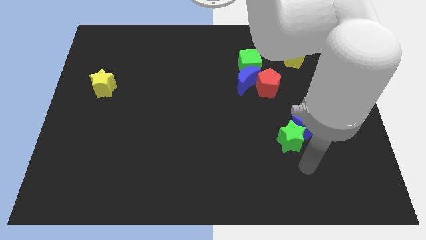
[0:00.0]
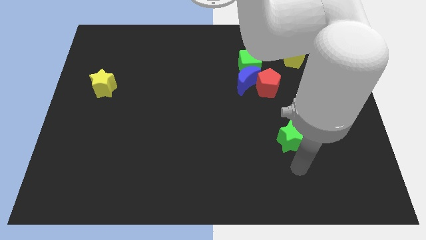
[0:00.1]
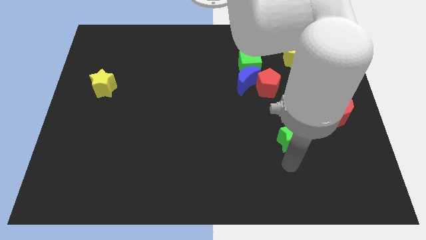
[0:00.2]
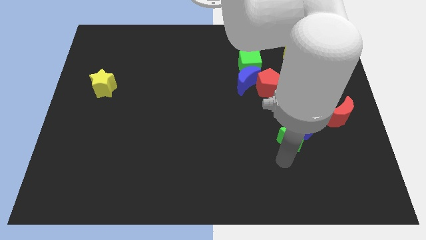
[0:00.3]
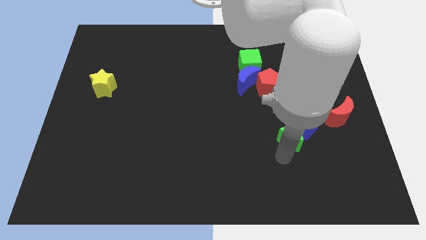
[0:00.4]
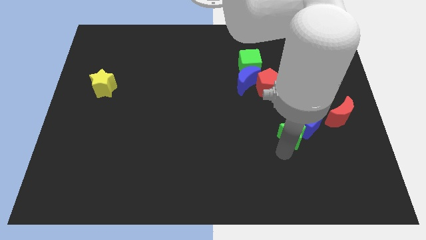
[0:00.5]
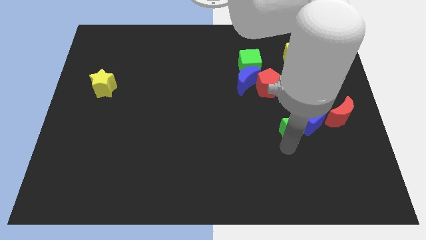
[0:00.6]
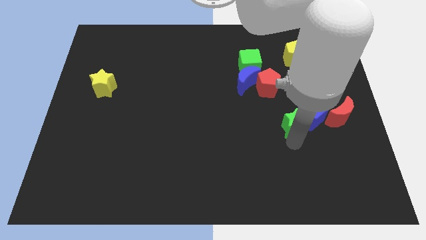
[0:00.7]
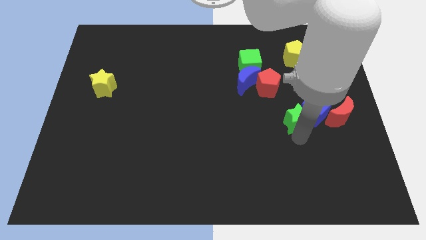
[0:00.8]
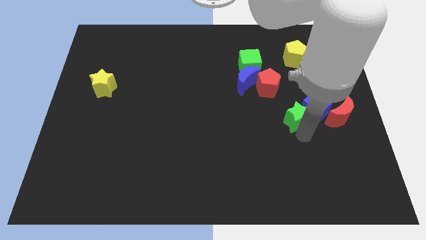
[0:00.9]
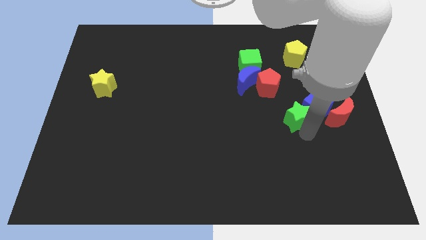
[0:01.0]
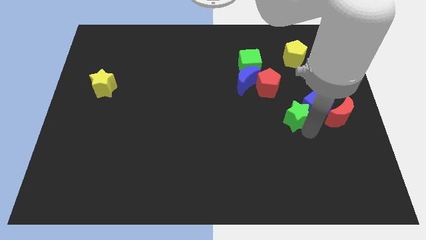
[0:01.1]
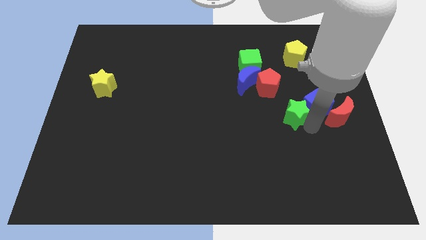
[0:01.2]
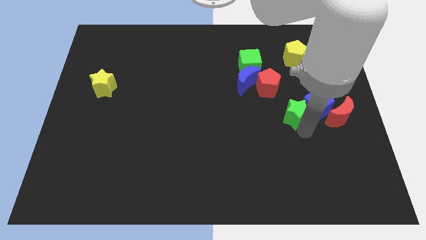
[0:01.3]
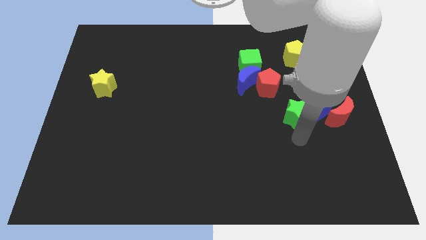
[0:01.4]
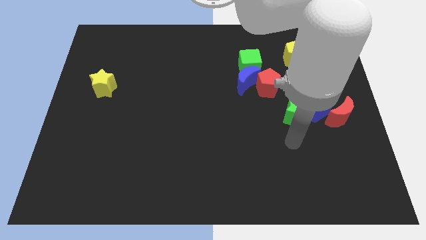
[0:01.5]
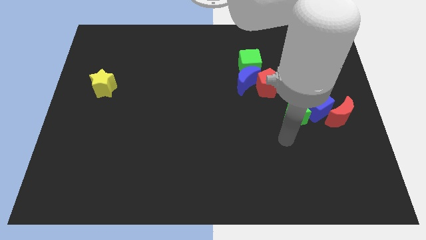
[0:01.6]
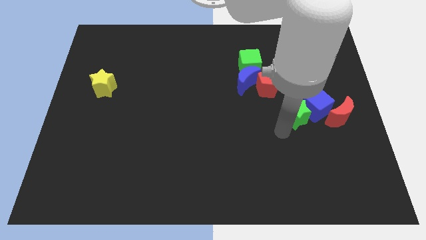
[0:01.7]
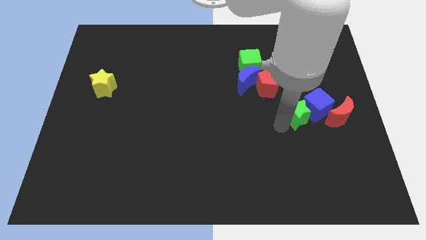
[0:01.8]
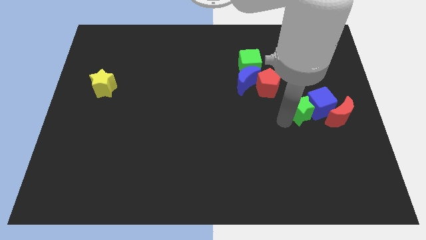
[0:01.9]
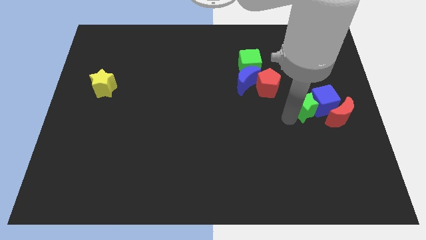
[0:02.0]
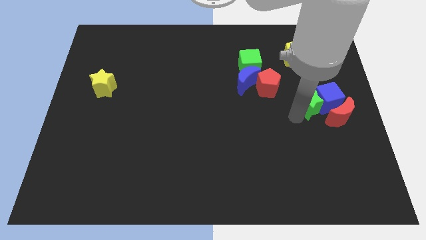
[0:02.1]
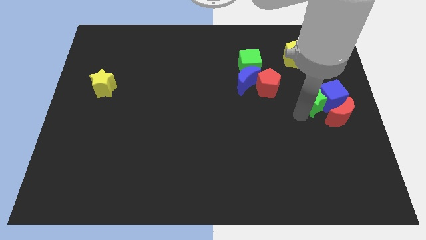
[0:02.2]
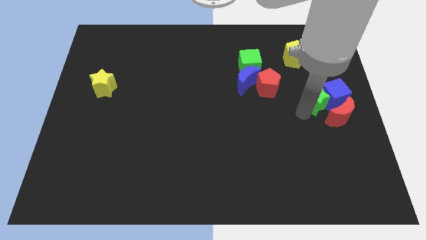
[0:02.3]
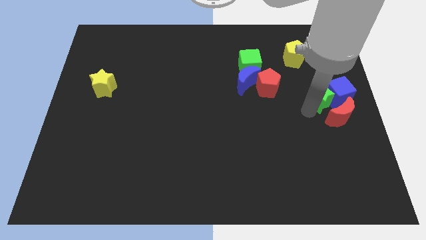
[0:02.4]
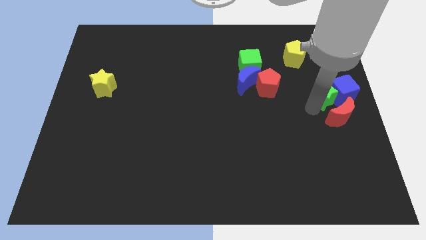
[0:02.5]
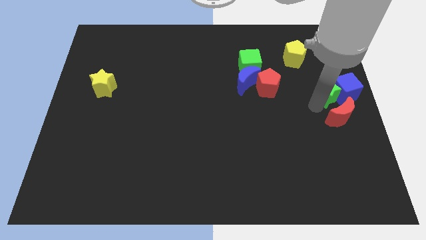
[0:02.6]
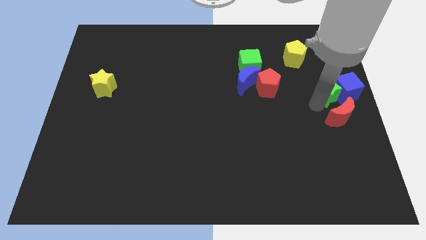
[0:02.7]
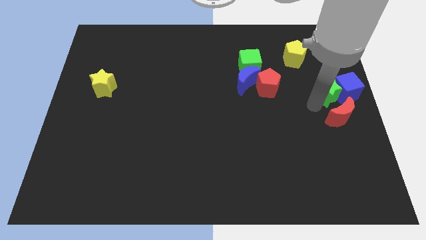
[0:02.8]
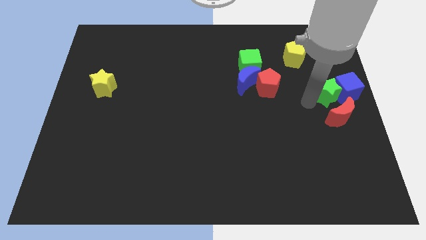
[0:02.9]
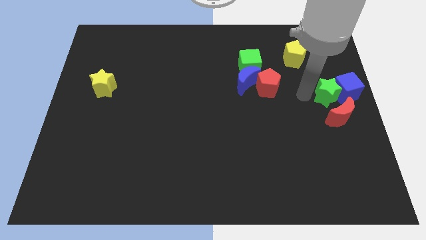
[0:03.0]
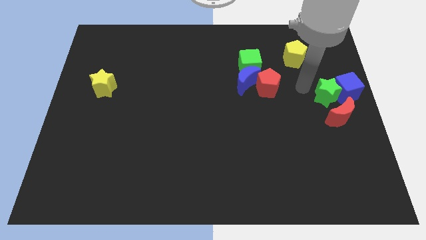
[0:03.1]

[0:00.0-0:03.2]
push the green star and blue cube to the center right of the board

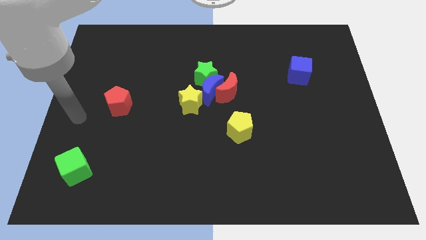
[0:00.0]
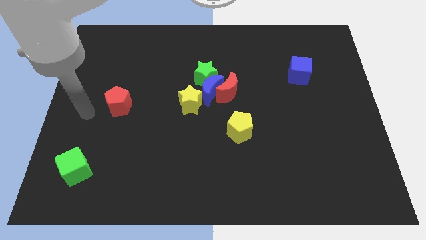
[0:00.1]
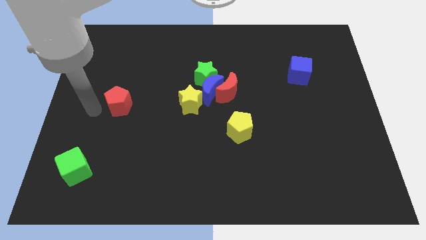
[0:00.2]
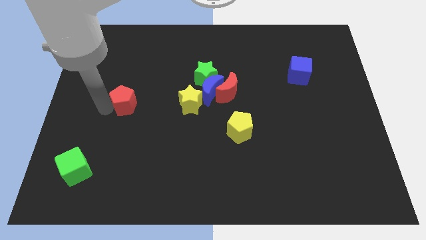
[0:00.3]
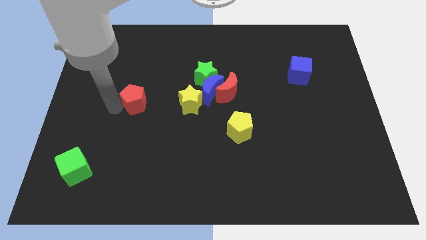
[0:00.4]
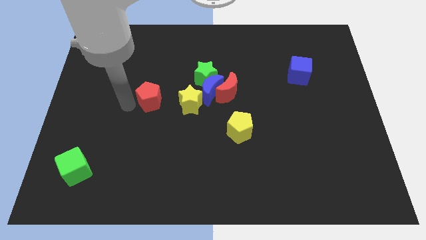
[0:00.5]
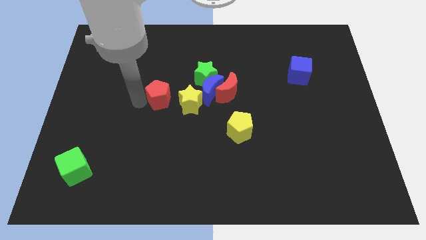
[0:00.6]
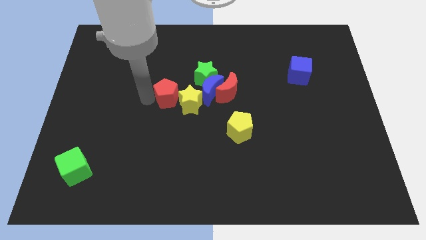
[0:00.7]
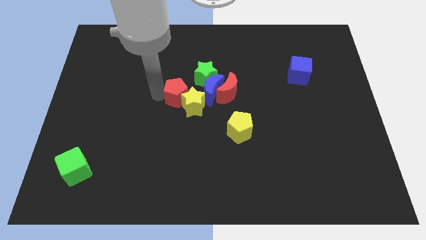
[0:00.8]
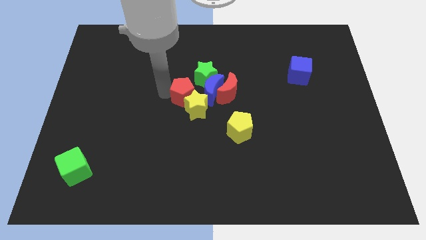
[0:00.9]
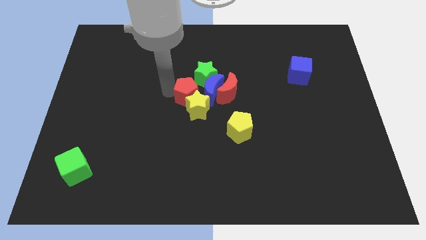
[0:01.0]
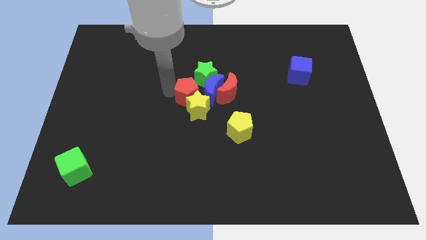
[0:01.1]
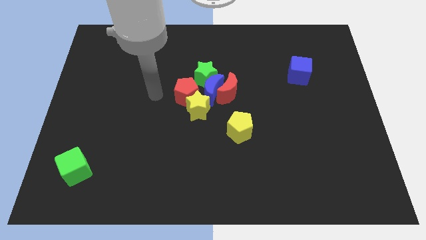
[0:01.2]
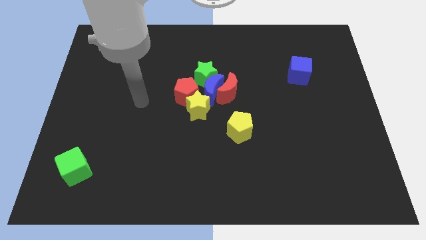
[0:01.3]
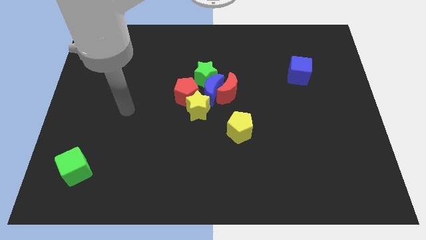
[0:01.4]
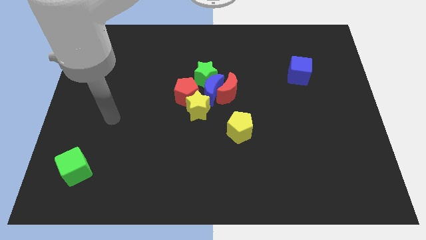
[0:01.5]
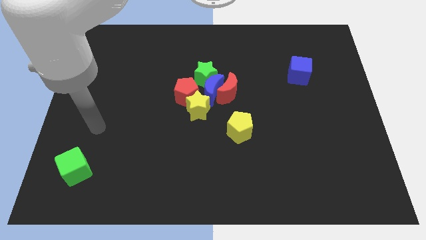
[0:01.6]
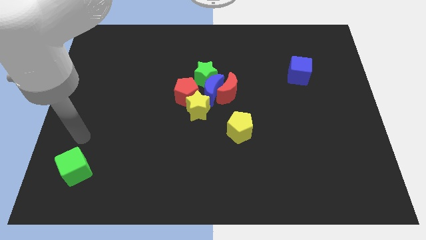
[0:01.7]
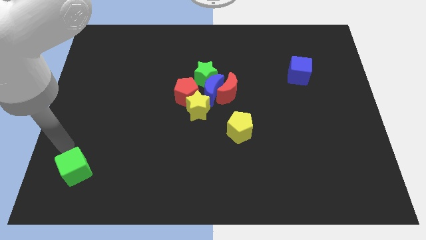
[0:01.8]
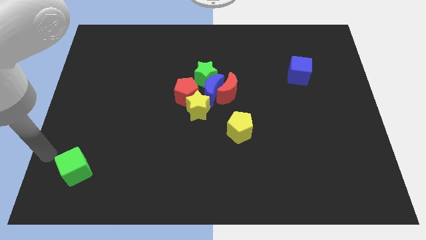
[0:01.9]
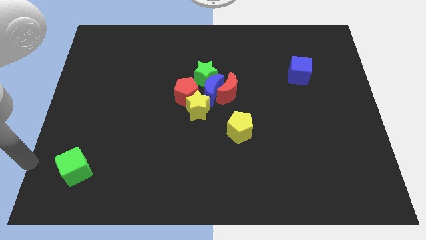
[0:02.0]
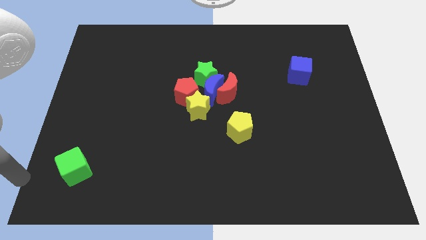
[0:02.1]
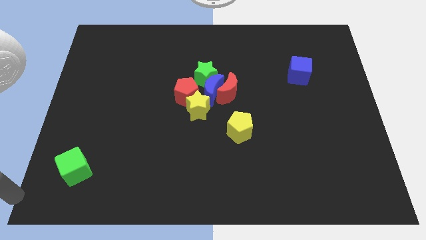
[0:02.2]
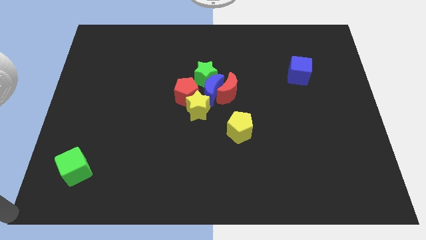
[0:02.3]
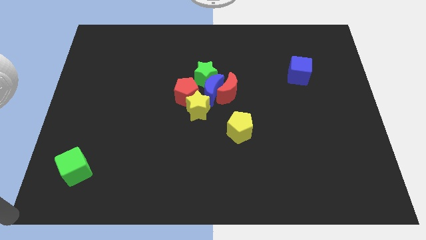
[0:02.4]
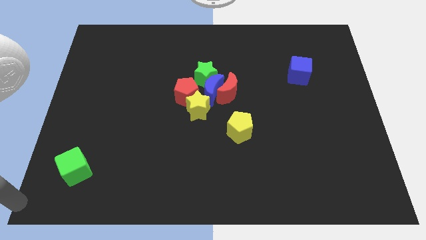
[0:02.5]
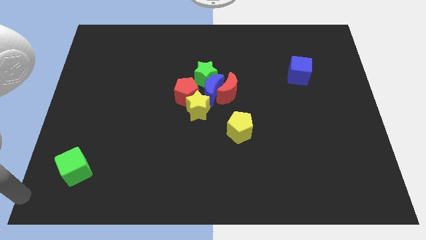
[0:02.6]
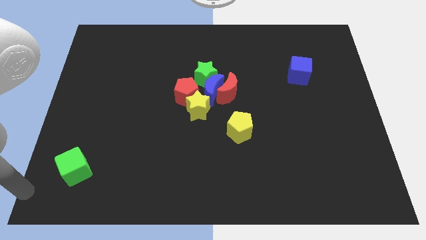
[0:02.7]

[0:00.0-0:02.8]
place the arm to the bottom left of the board

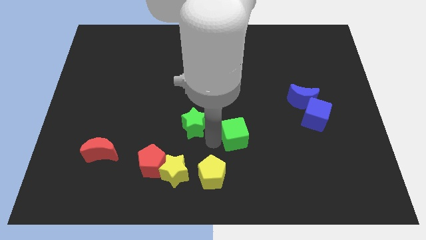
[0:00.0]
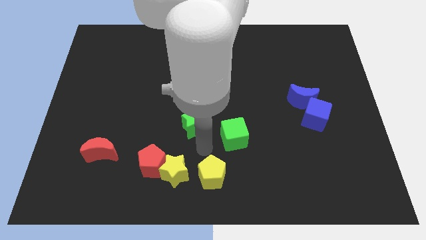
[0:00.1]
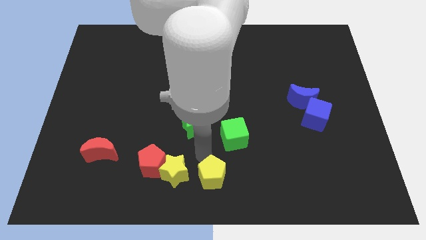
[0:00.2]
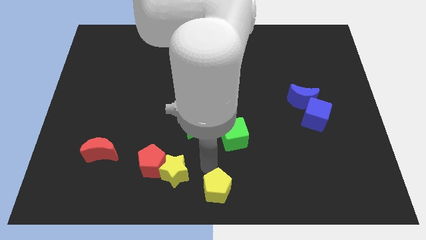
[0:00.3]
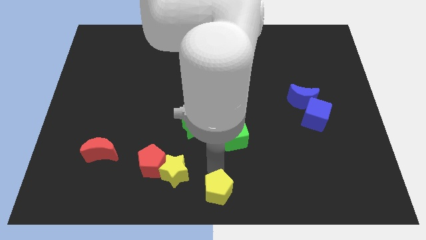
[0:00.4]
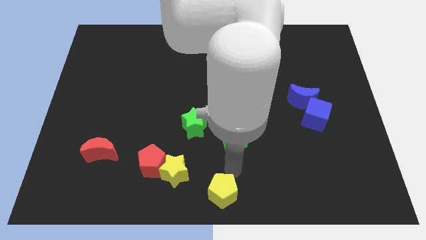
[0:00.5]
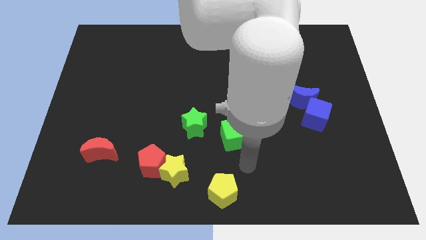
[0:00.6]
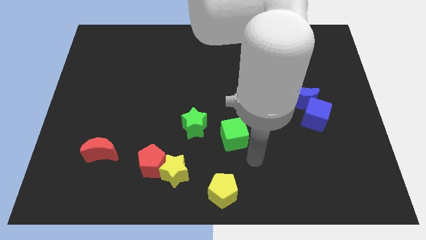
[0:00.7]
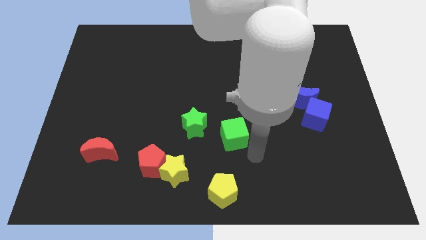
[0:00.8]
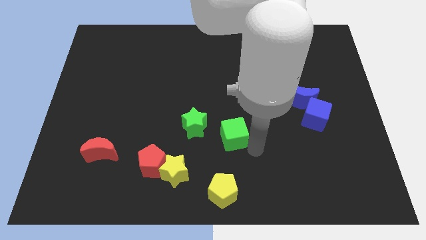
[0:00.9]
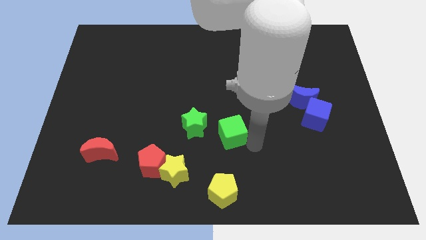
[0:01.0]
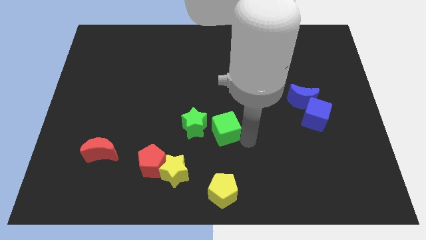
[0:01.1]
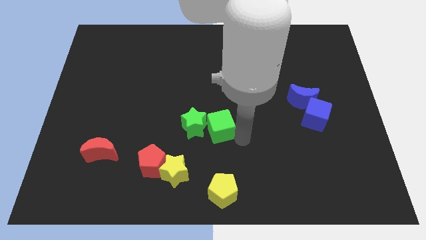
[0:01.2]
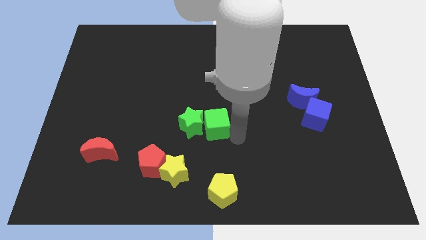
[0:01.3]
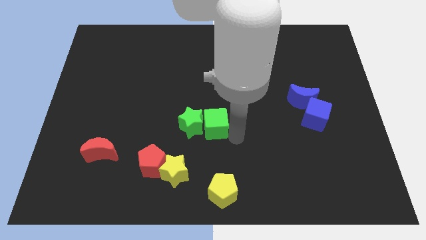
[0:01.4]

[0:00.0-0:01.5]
push the yellow pentagon and green cube apart

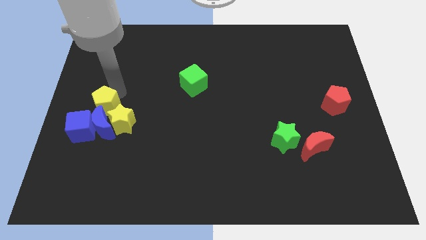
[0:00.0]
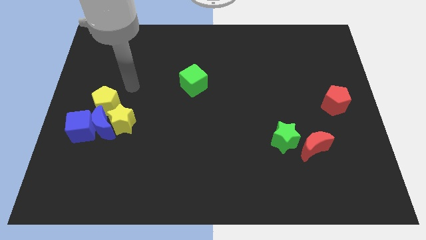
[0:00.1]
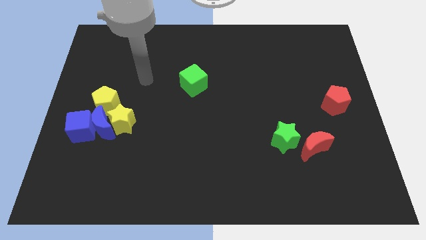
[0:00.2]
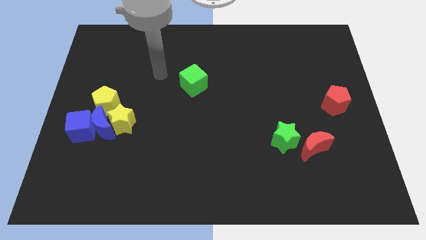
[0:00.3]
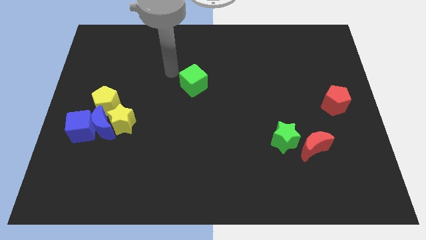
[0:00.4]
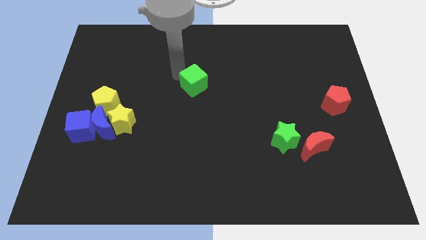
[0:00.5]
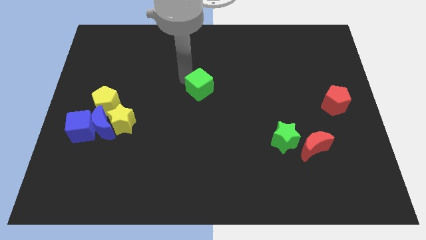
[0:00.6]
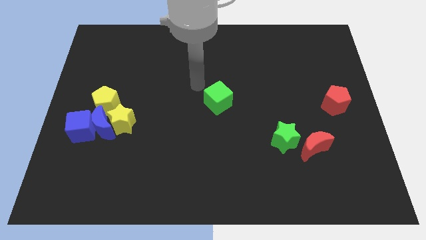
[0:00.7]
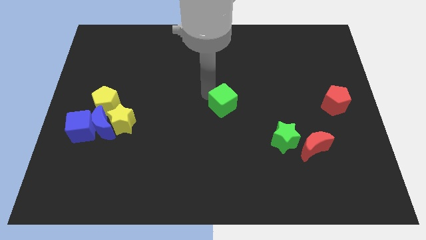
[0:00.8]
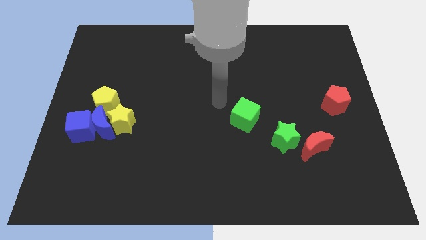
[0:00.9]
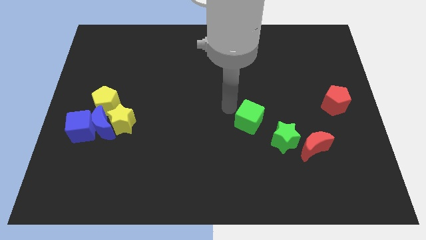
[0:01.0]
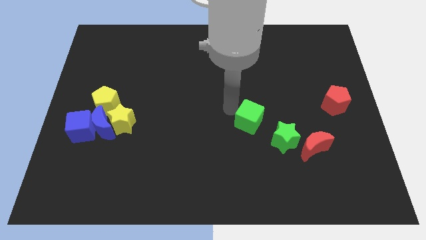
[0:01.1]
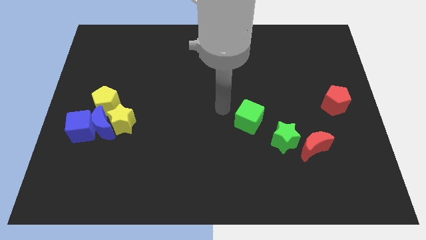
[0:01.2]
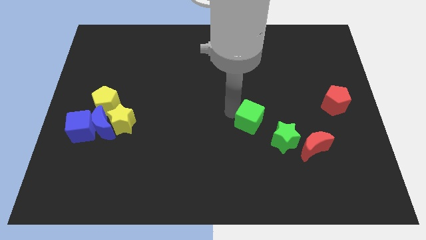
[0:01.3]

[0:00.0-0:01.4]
slightly move the green cube closer to the green star

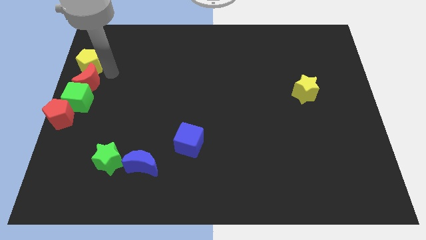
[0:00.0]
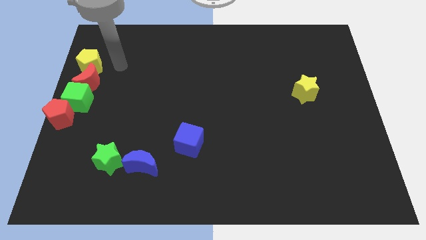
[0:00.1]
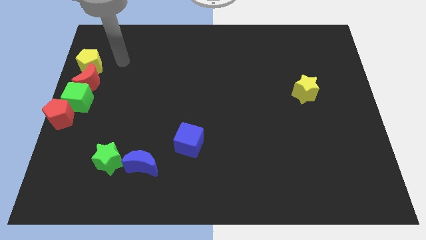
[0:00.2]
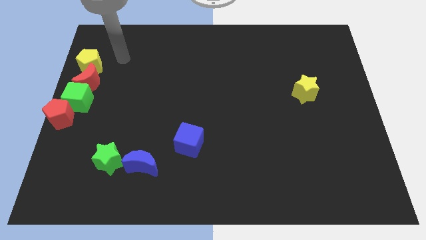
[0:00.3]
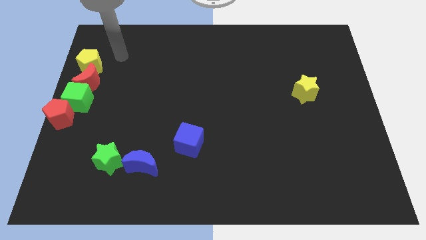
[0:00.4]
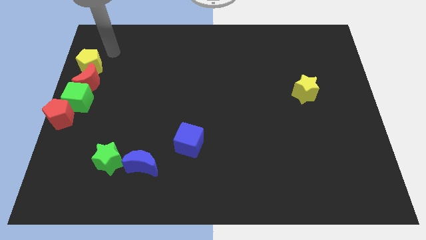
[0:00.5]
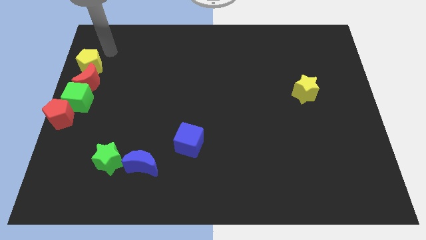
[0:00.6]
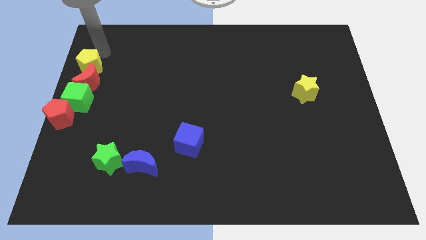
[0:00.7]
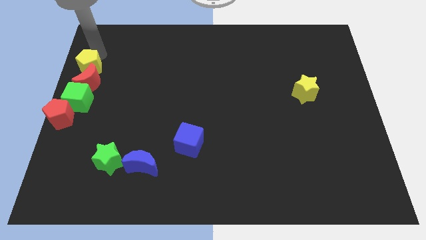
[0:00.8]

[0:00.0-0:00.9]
tap the yellow pentagon
